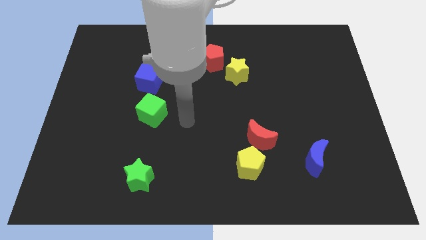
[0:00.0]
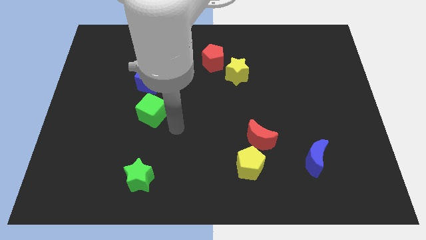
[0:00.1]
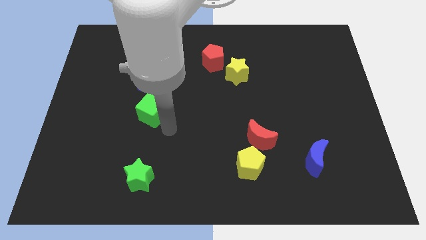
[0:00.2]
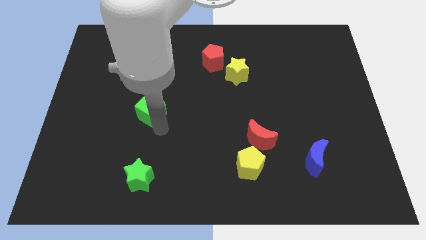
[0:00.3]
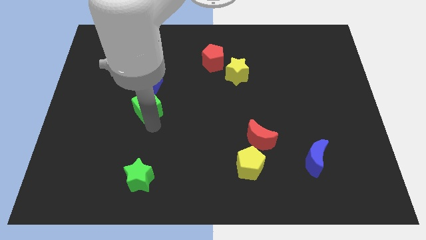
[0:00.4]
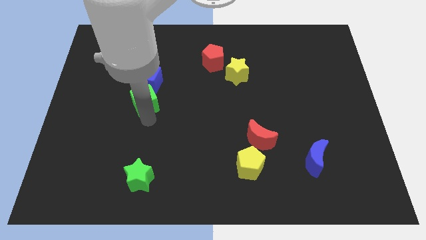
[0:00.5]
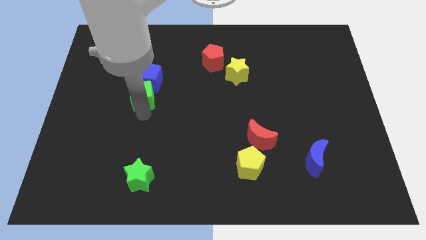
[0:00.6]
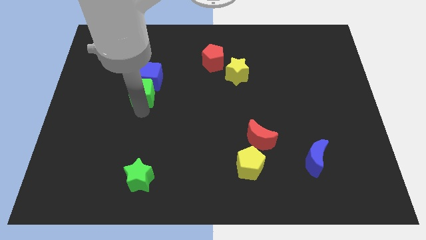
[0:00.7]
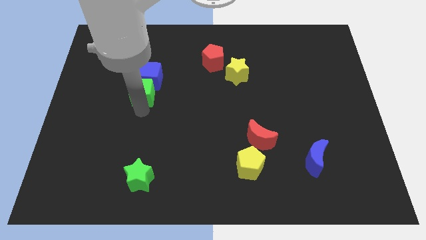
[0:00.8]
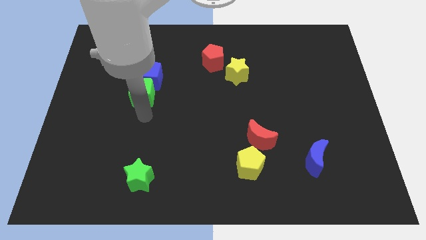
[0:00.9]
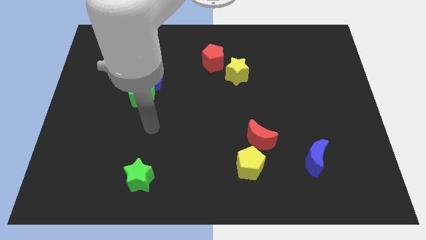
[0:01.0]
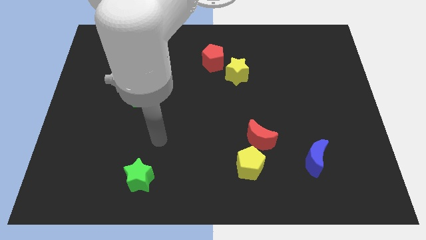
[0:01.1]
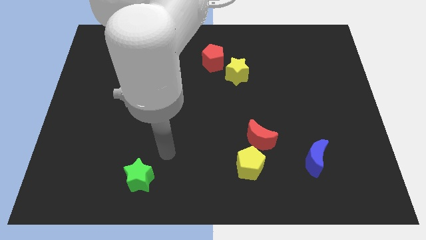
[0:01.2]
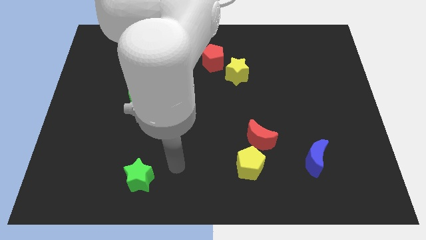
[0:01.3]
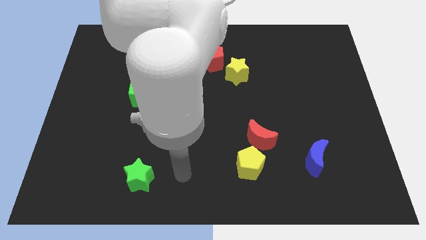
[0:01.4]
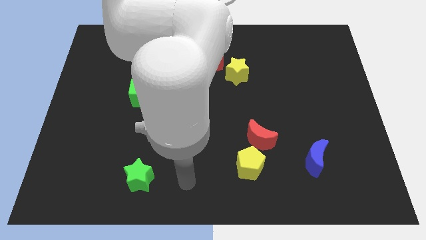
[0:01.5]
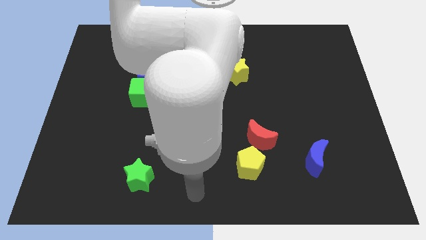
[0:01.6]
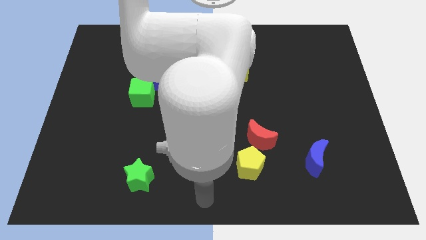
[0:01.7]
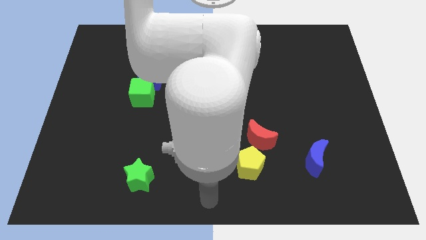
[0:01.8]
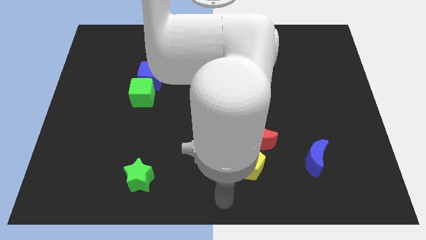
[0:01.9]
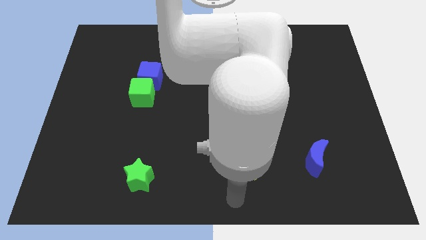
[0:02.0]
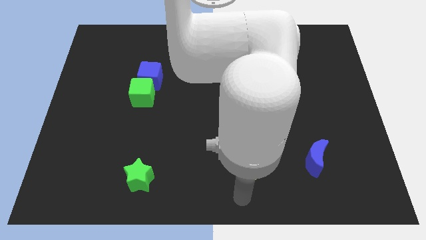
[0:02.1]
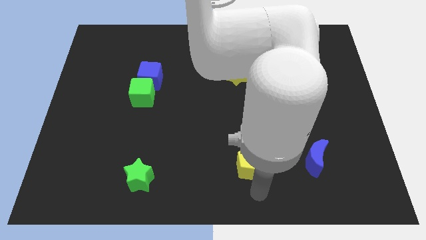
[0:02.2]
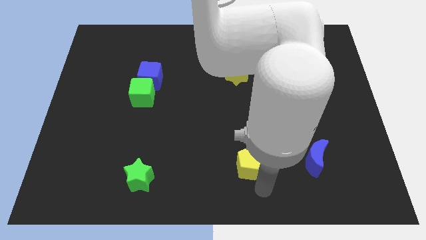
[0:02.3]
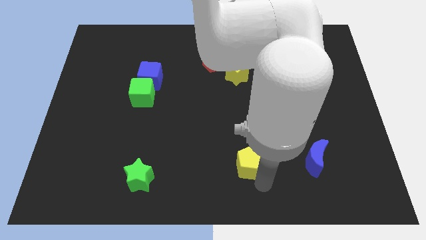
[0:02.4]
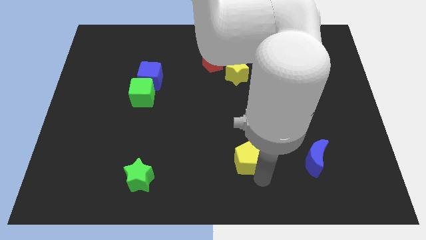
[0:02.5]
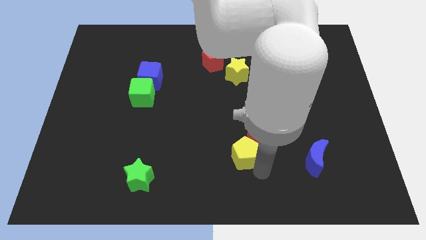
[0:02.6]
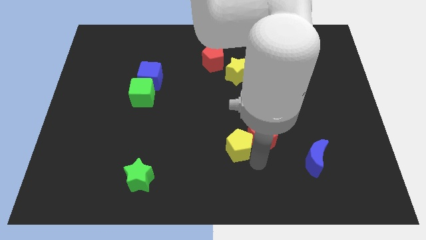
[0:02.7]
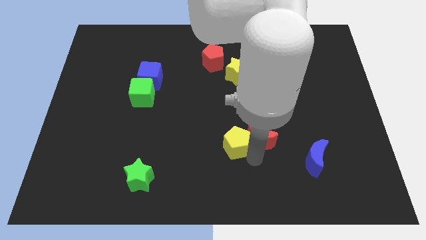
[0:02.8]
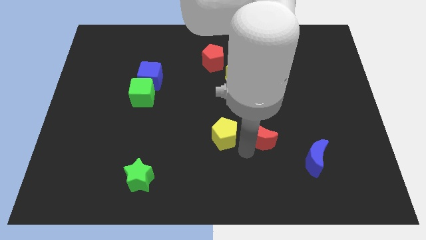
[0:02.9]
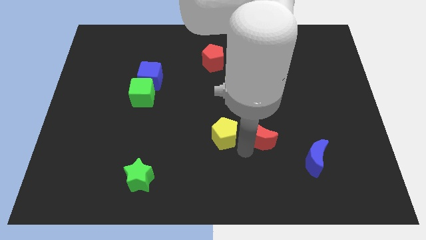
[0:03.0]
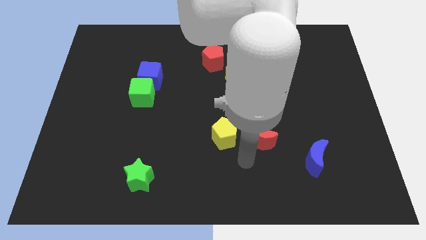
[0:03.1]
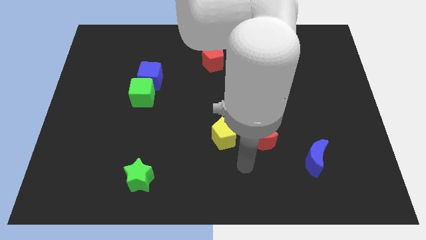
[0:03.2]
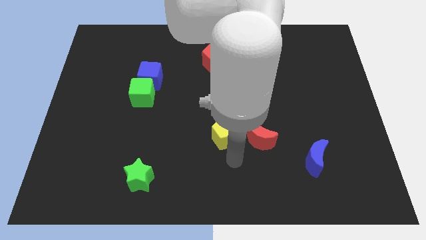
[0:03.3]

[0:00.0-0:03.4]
separate the yellow pentagon and red moon

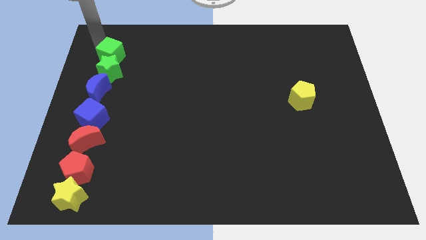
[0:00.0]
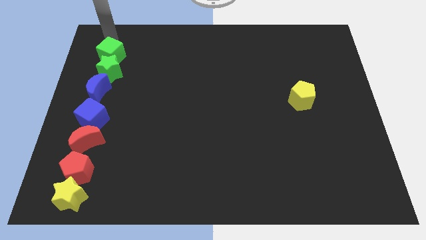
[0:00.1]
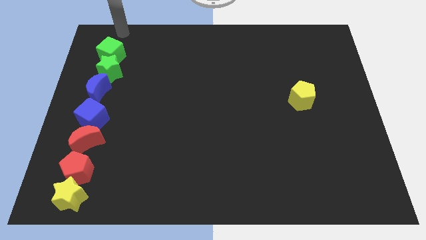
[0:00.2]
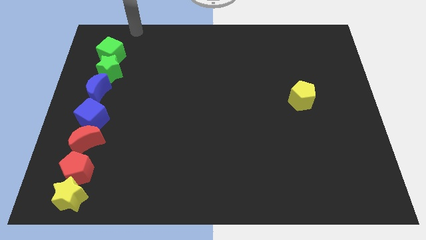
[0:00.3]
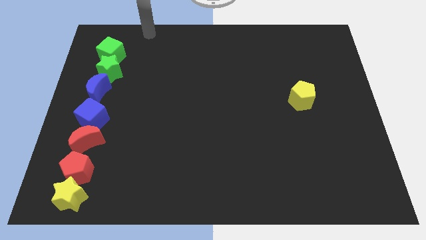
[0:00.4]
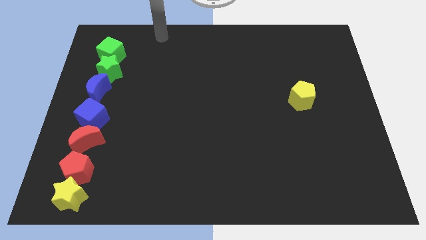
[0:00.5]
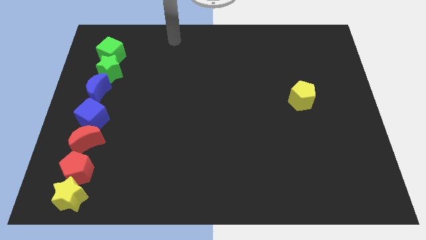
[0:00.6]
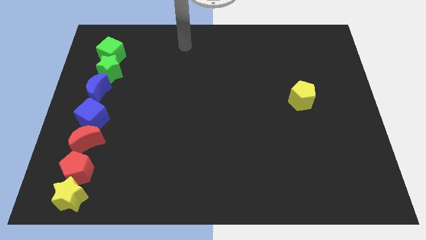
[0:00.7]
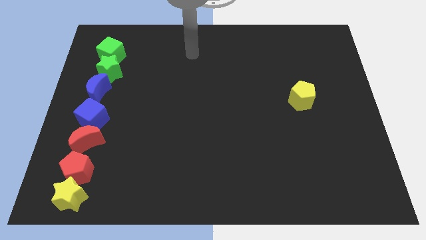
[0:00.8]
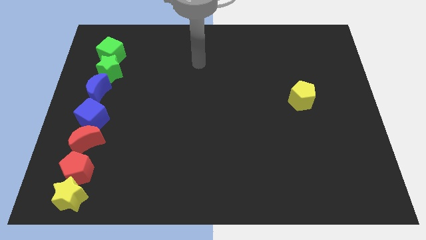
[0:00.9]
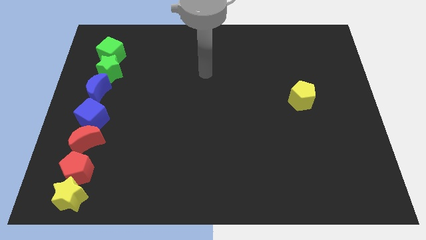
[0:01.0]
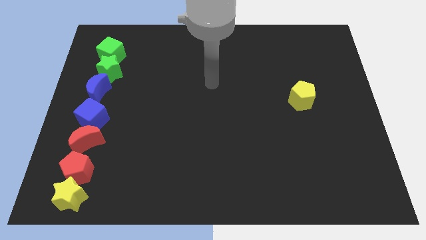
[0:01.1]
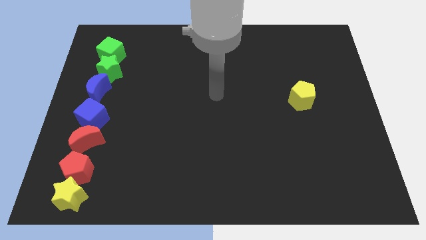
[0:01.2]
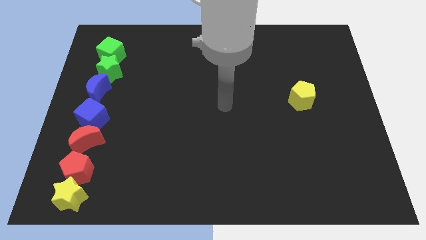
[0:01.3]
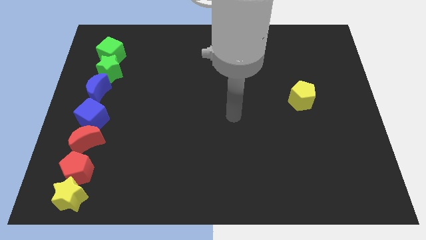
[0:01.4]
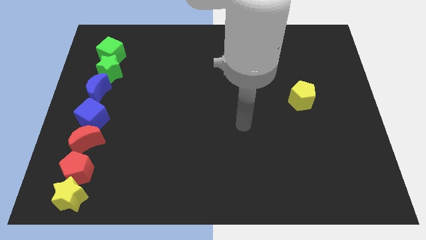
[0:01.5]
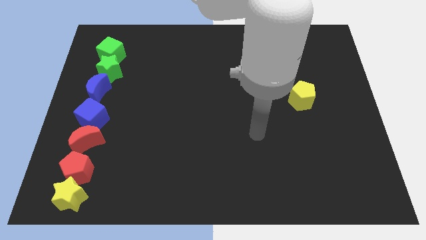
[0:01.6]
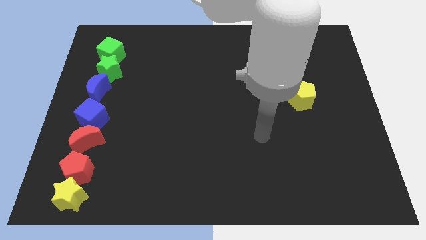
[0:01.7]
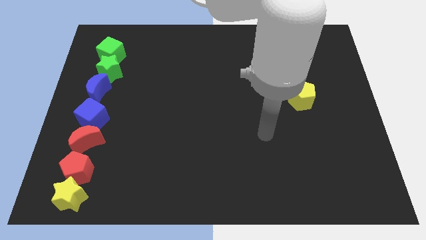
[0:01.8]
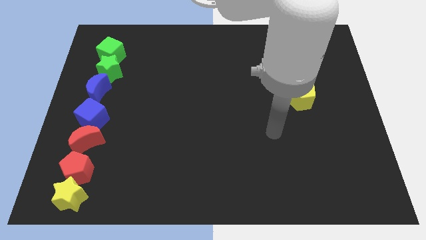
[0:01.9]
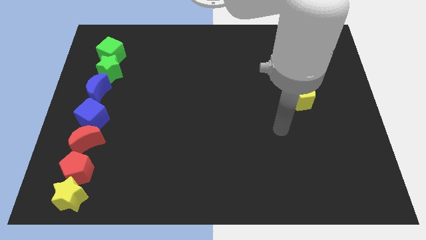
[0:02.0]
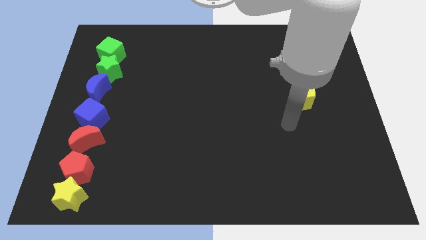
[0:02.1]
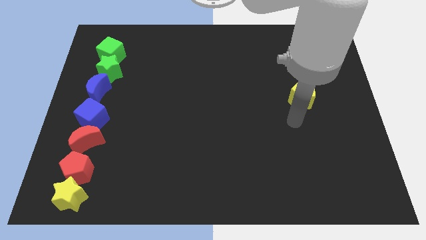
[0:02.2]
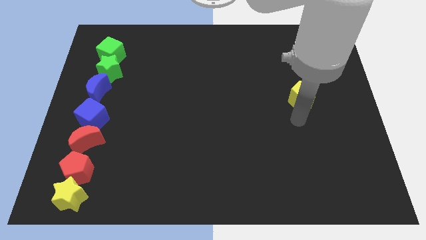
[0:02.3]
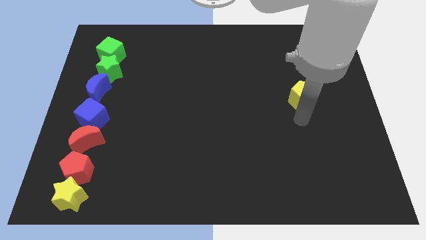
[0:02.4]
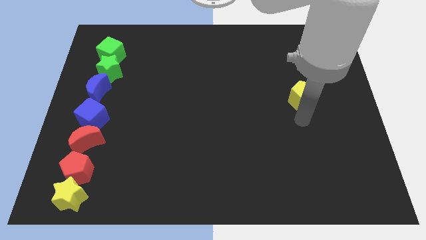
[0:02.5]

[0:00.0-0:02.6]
move your arm away from green cube

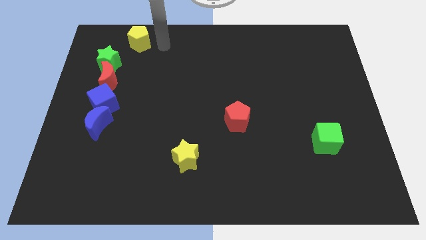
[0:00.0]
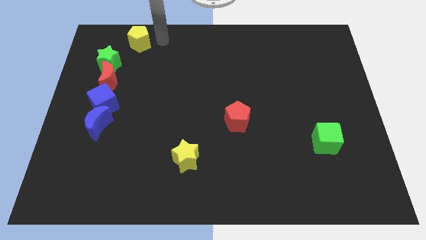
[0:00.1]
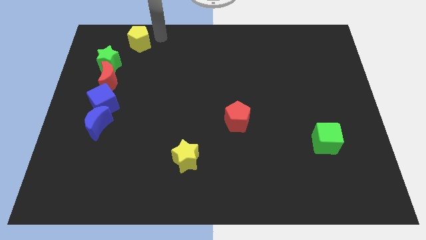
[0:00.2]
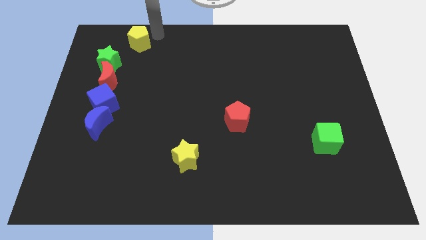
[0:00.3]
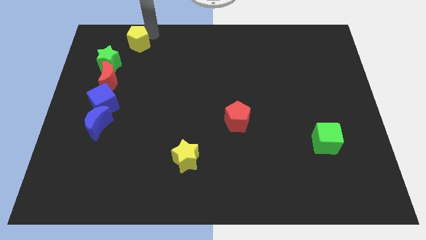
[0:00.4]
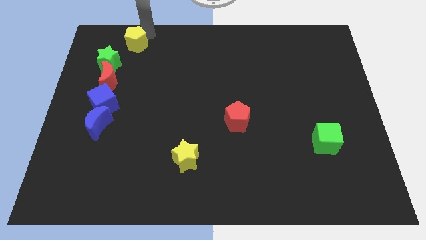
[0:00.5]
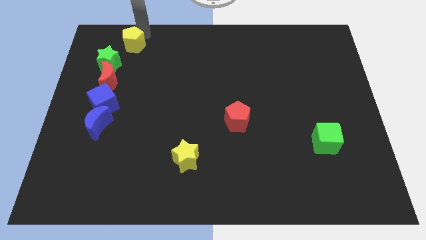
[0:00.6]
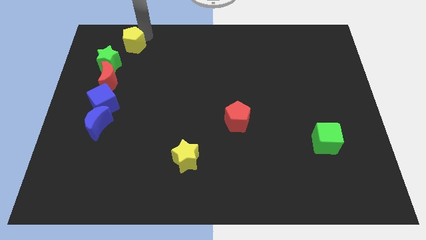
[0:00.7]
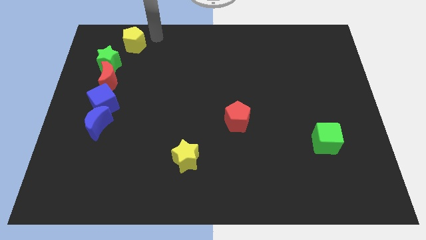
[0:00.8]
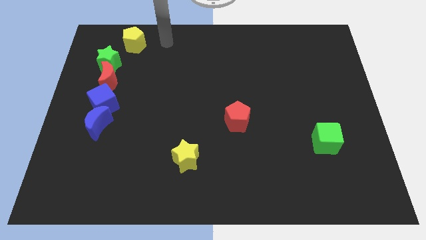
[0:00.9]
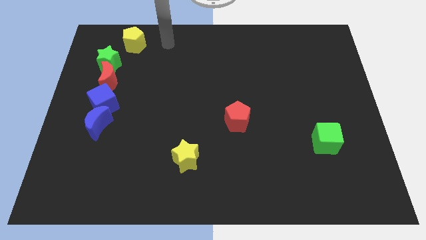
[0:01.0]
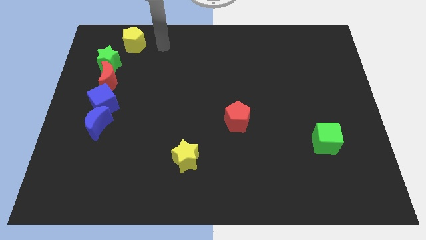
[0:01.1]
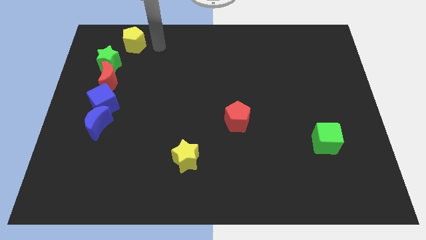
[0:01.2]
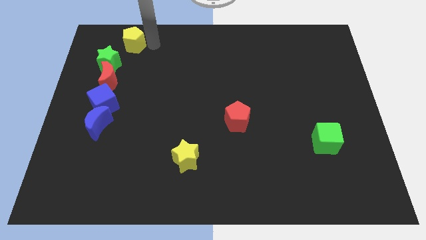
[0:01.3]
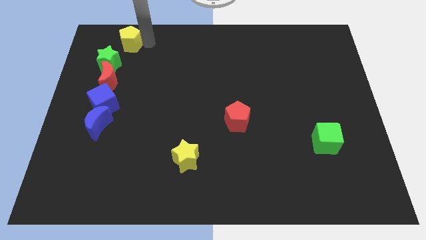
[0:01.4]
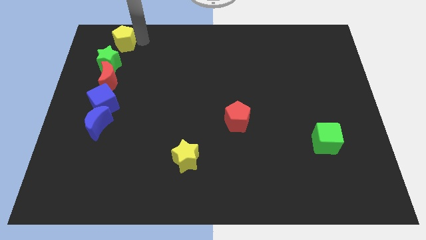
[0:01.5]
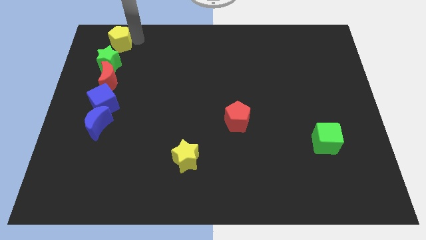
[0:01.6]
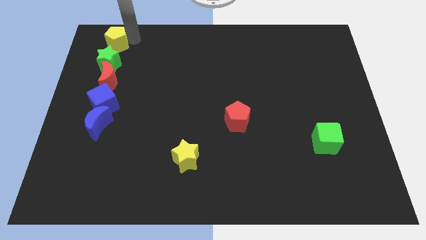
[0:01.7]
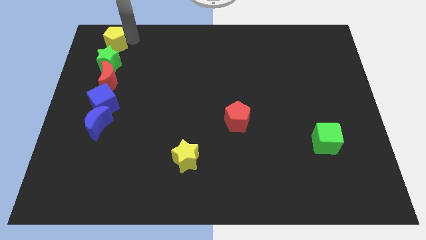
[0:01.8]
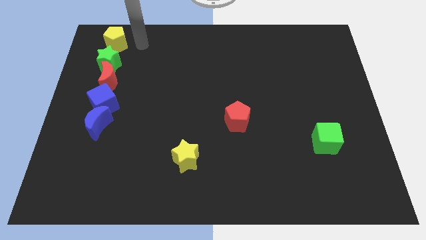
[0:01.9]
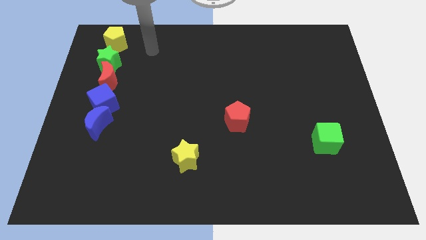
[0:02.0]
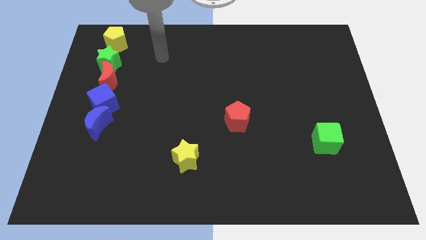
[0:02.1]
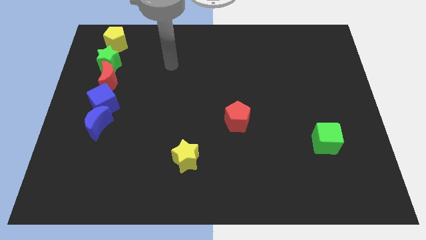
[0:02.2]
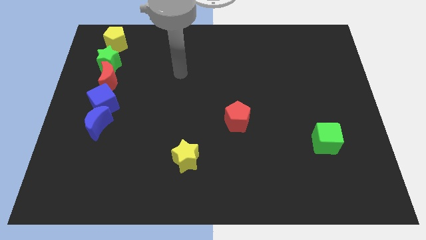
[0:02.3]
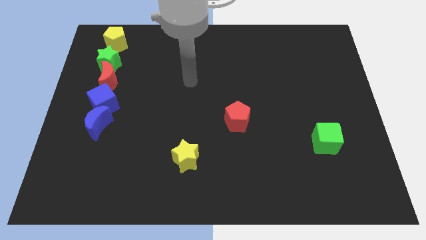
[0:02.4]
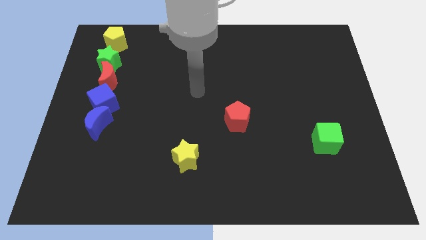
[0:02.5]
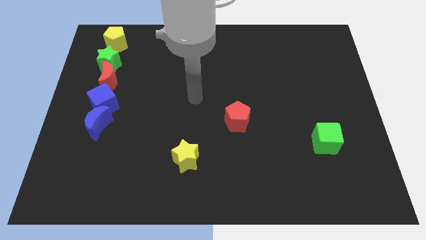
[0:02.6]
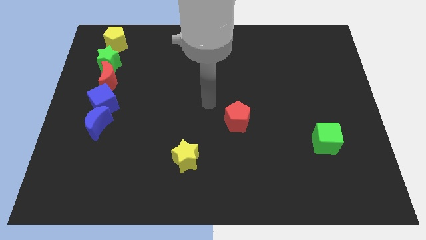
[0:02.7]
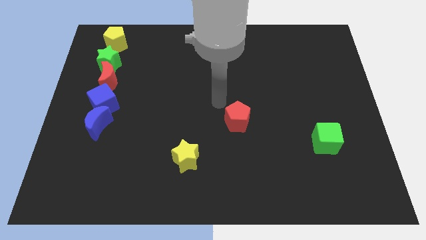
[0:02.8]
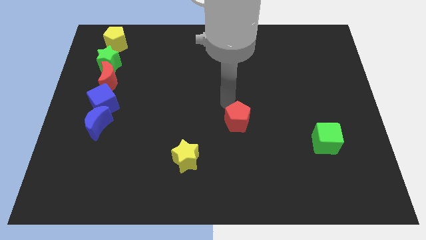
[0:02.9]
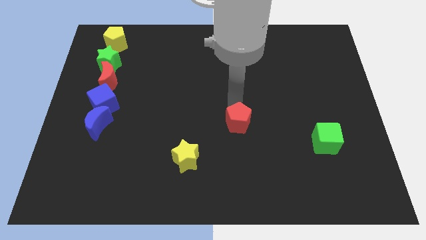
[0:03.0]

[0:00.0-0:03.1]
place the yellow pentagon above the green star
